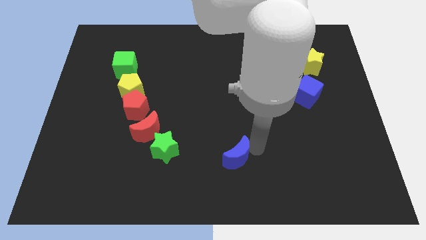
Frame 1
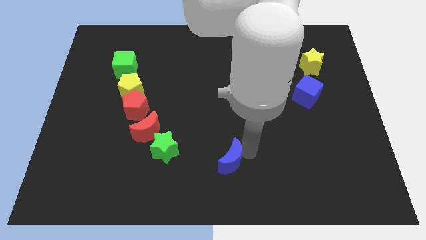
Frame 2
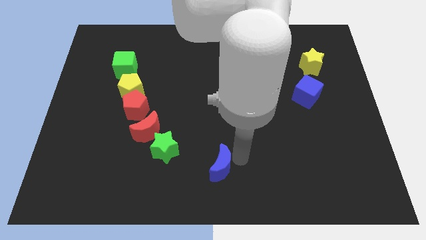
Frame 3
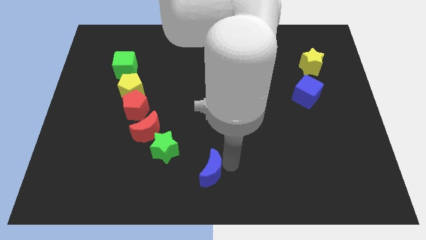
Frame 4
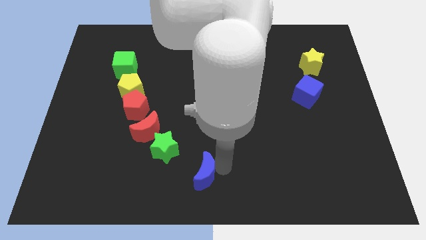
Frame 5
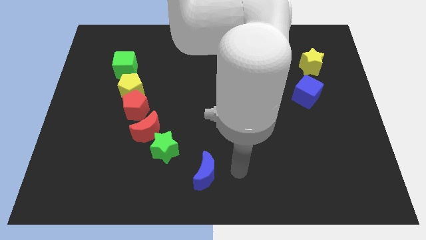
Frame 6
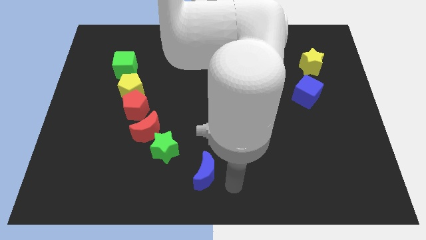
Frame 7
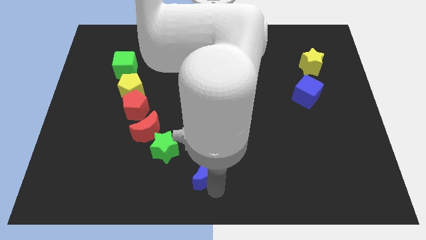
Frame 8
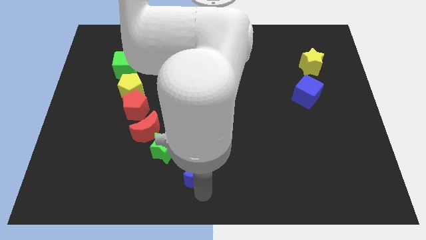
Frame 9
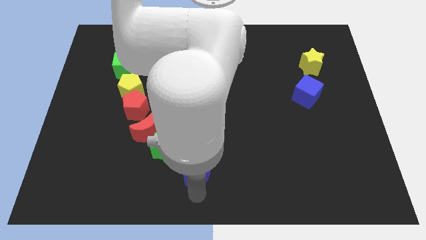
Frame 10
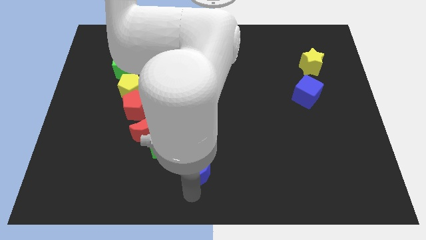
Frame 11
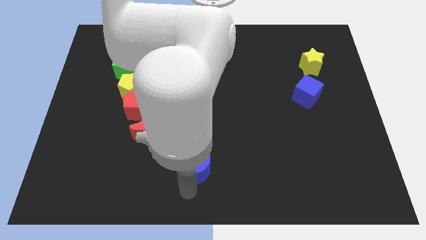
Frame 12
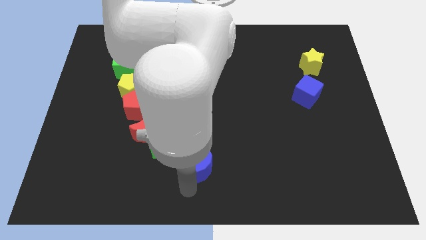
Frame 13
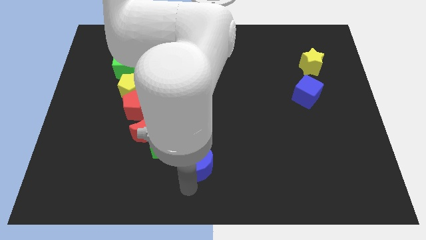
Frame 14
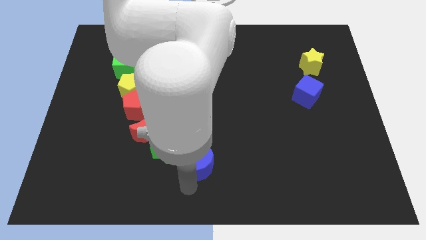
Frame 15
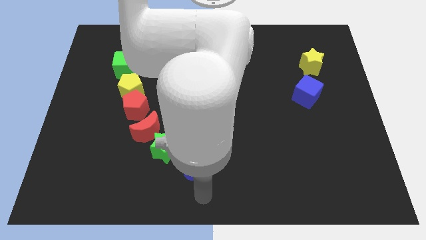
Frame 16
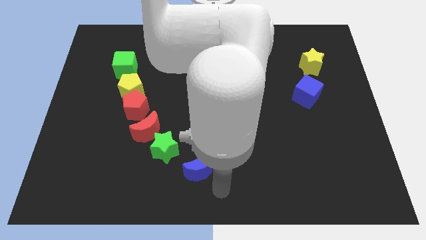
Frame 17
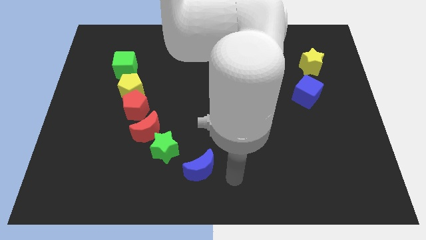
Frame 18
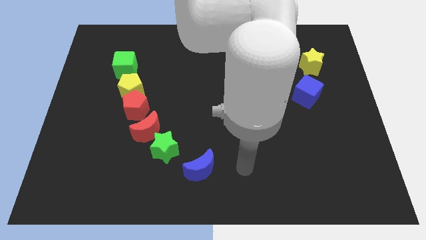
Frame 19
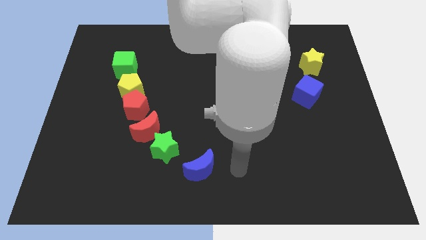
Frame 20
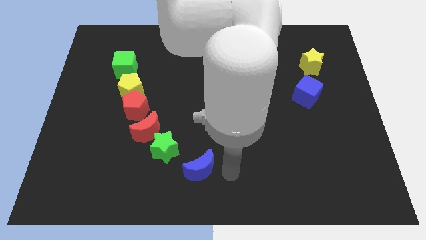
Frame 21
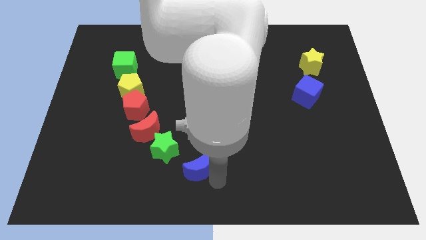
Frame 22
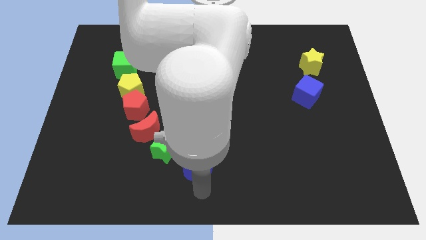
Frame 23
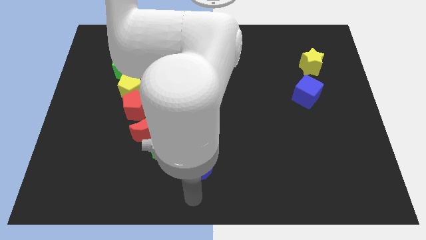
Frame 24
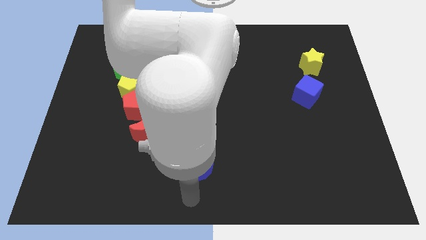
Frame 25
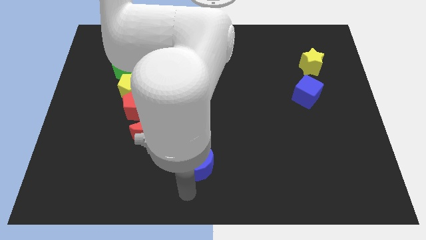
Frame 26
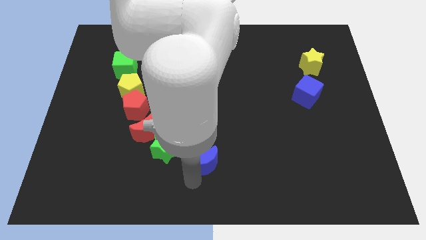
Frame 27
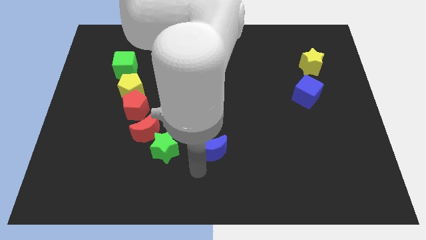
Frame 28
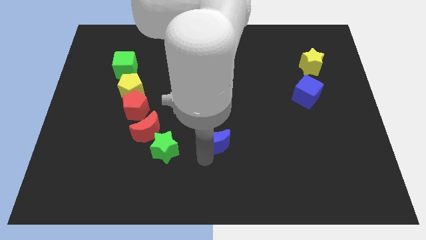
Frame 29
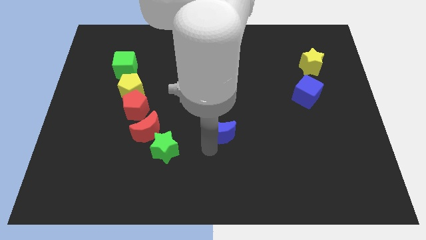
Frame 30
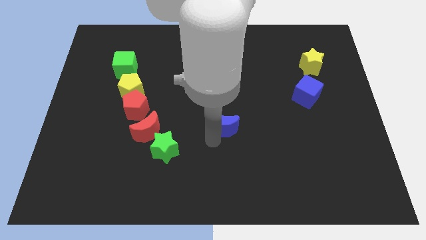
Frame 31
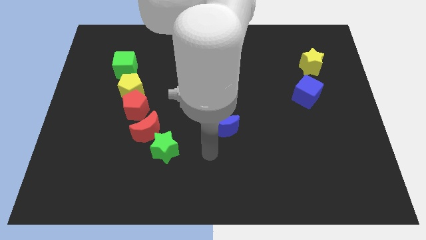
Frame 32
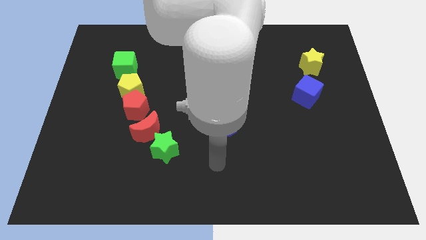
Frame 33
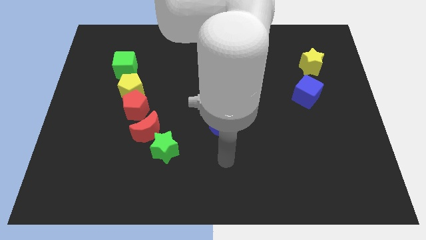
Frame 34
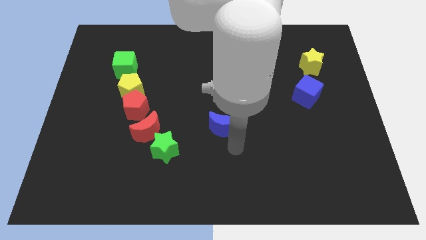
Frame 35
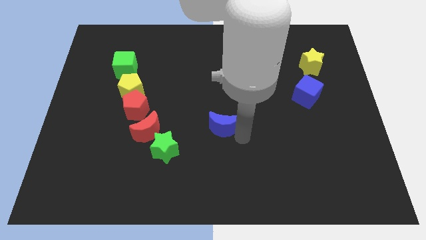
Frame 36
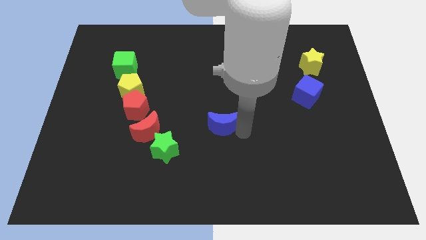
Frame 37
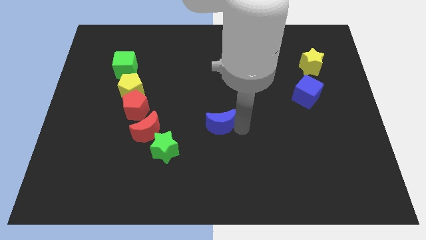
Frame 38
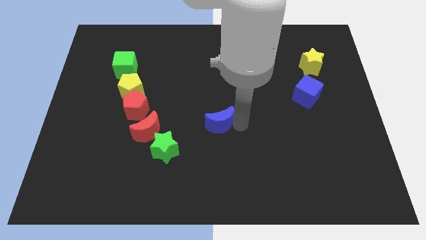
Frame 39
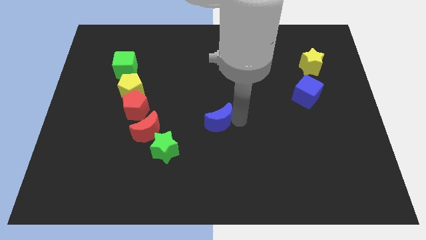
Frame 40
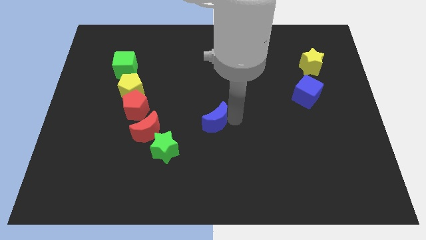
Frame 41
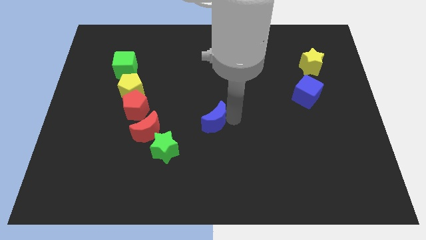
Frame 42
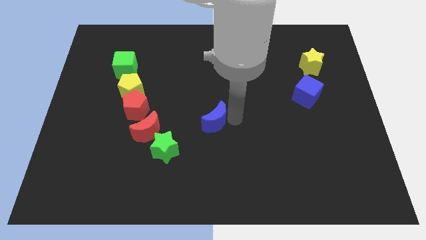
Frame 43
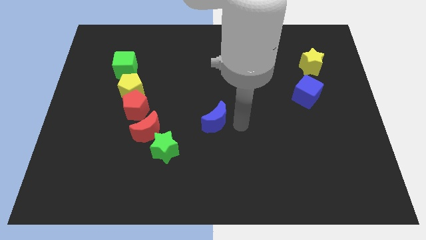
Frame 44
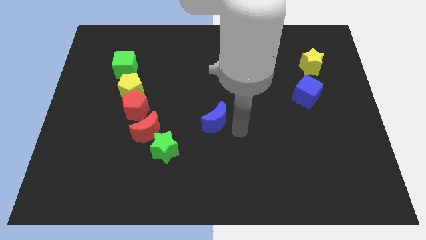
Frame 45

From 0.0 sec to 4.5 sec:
move the blue crescent to the right of the red crescent

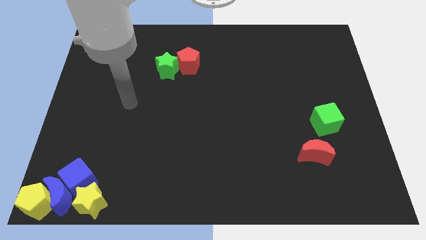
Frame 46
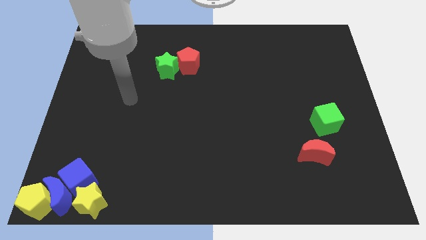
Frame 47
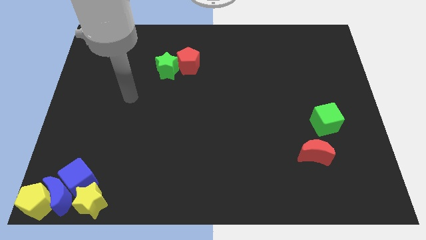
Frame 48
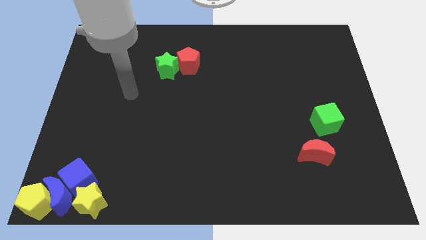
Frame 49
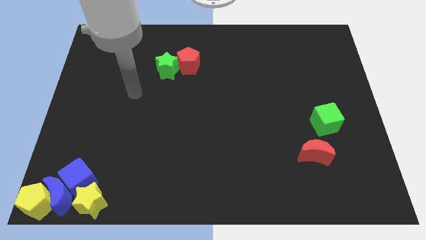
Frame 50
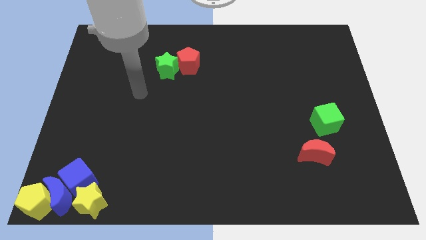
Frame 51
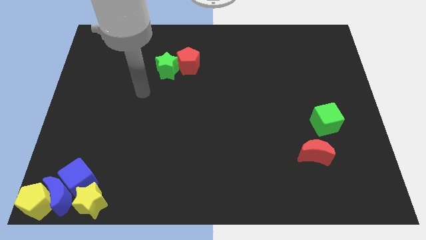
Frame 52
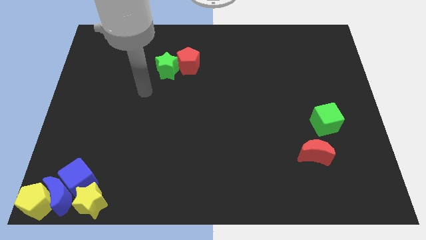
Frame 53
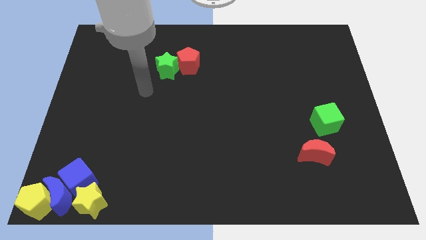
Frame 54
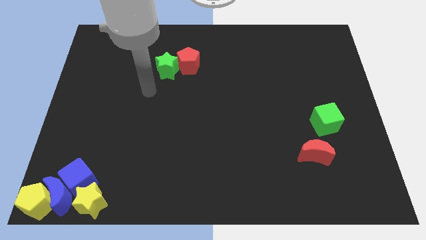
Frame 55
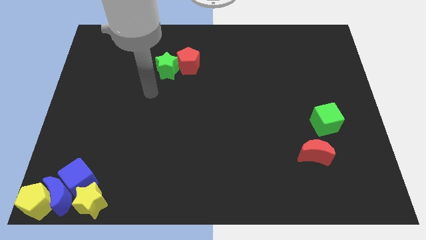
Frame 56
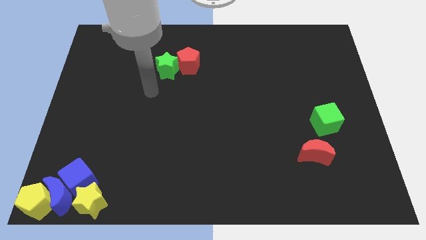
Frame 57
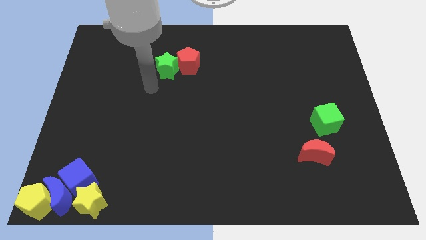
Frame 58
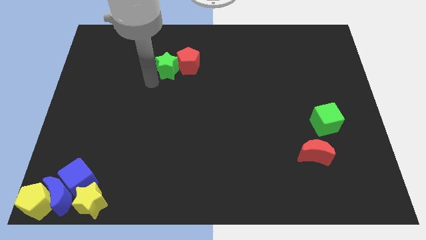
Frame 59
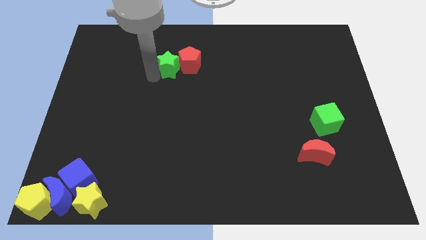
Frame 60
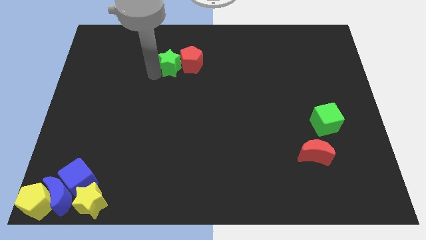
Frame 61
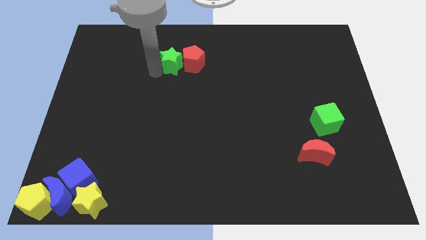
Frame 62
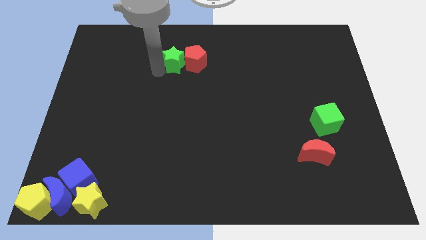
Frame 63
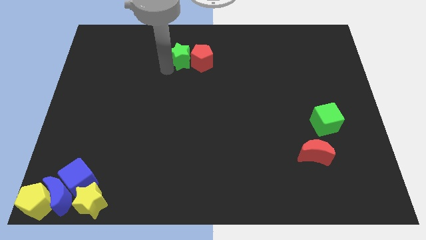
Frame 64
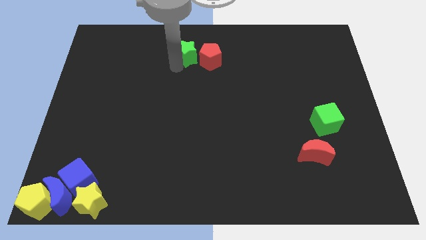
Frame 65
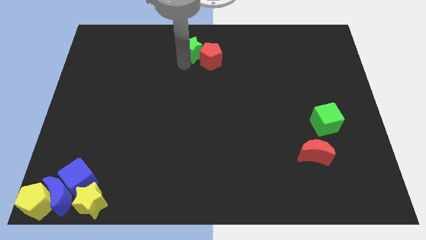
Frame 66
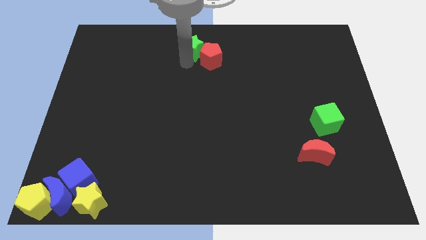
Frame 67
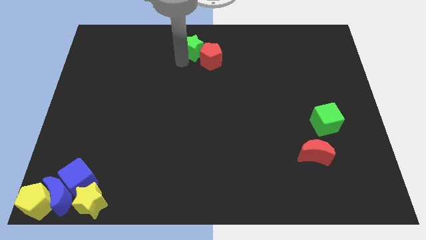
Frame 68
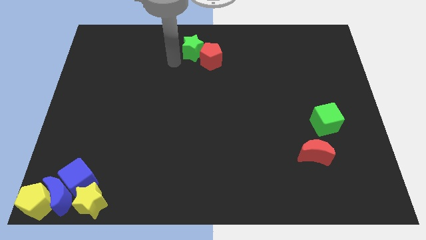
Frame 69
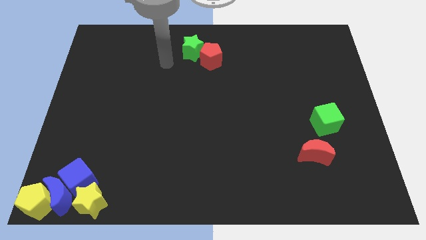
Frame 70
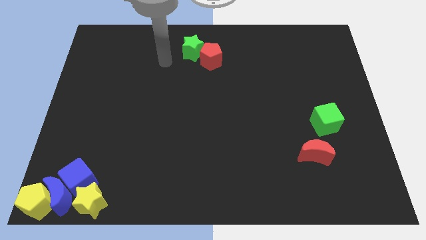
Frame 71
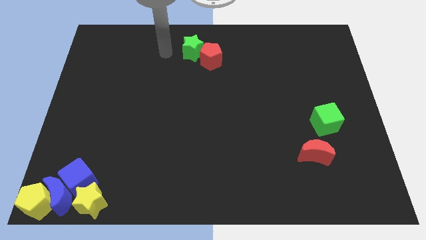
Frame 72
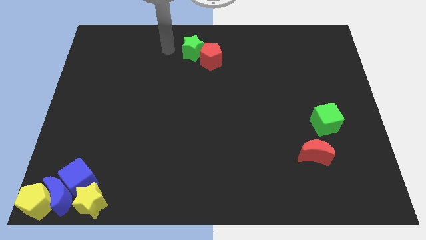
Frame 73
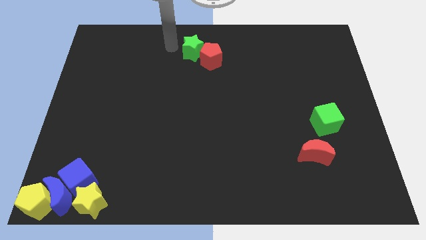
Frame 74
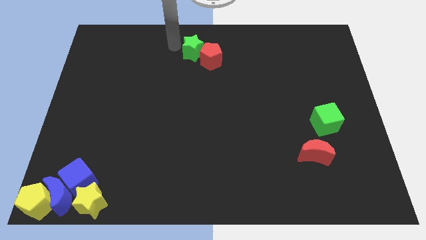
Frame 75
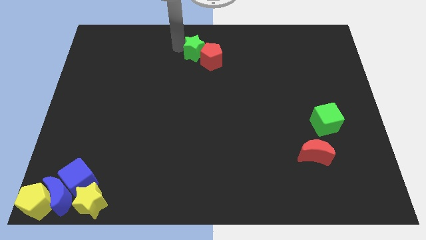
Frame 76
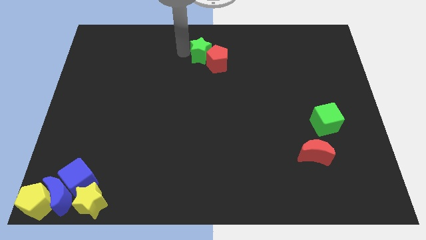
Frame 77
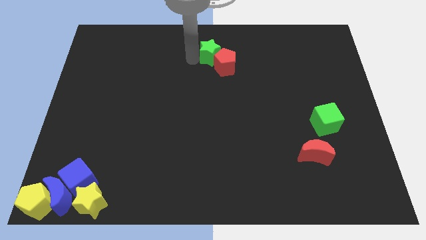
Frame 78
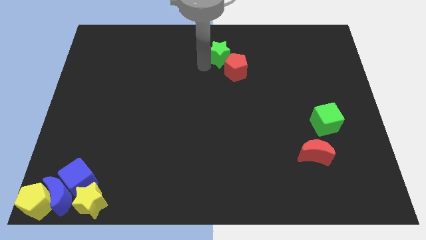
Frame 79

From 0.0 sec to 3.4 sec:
slide the green star and the red pentagon together towards the top center

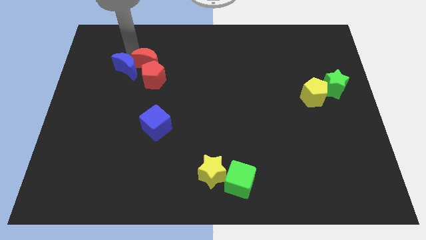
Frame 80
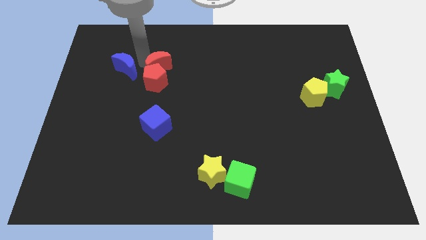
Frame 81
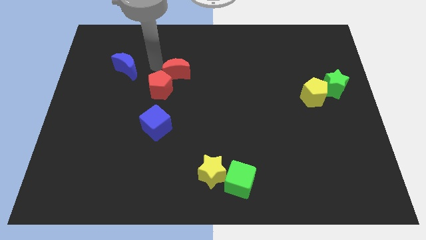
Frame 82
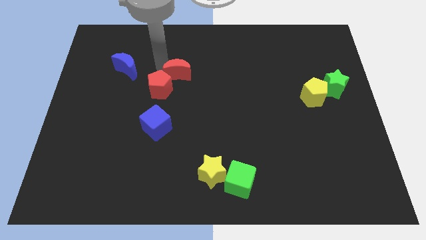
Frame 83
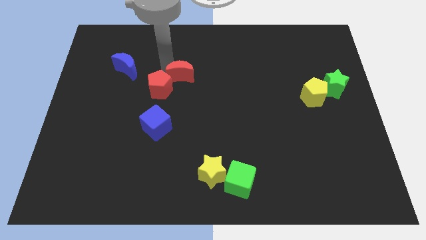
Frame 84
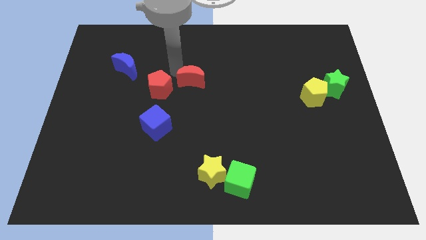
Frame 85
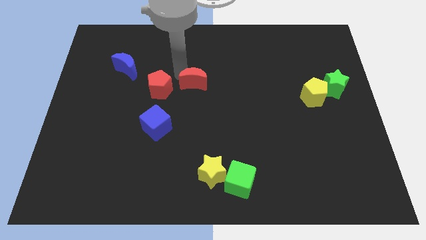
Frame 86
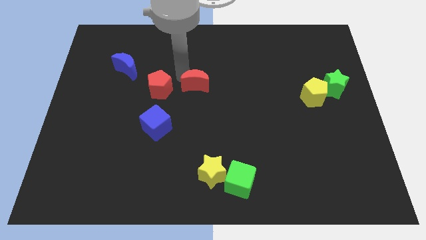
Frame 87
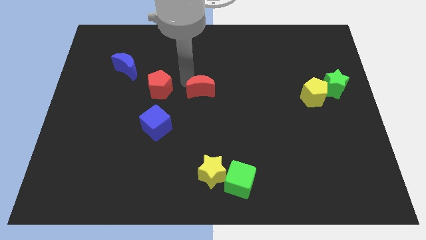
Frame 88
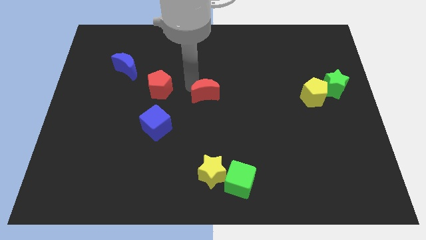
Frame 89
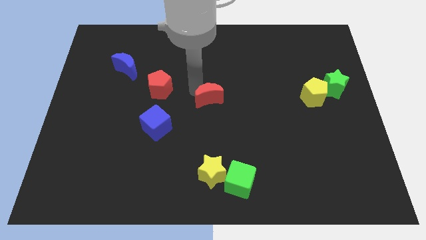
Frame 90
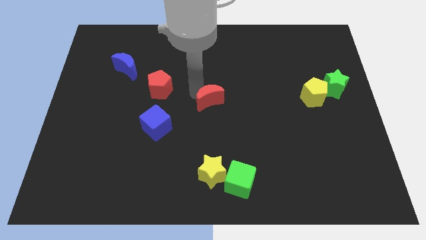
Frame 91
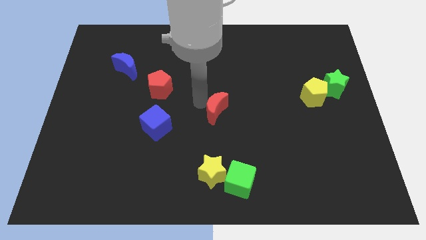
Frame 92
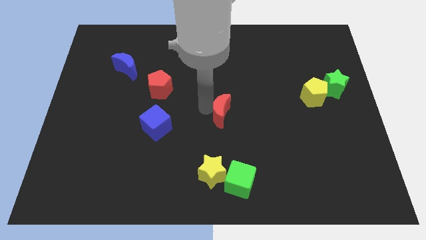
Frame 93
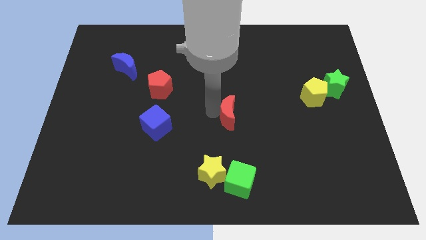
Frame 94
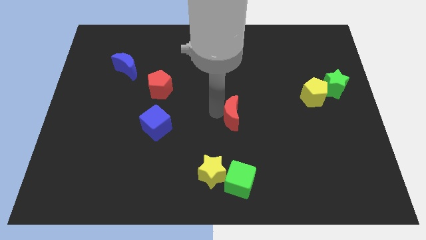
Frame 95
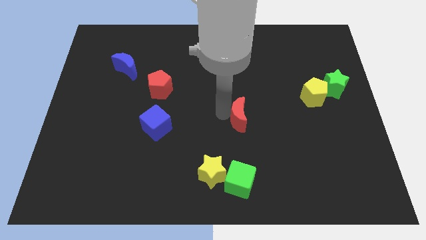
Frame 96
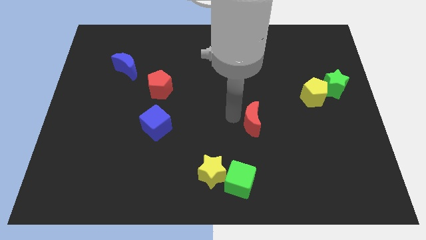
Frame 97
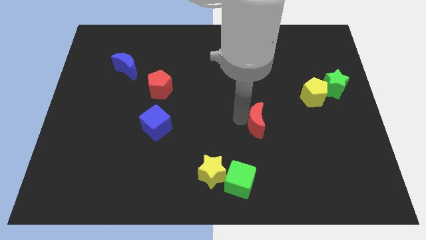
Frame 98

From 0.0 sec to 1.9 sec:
push red crescent above green cube
